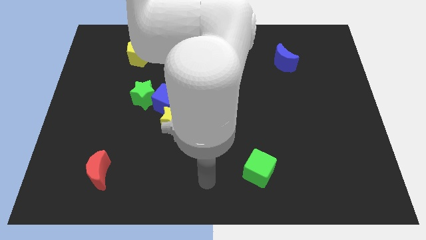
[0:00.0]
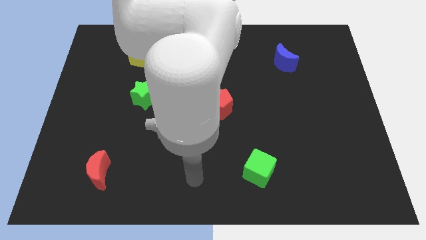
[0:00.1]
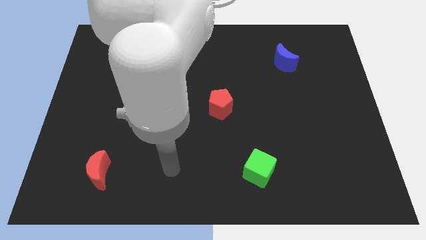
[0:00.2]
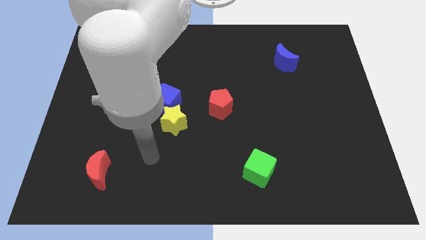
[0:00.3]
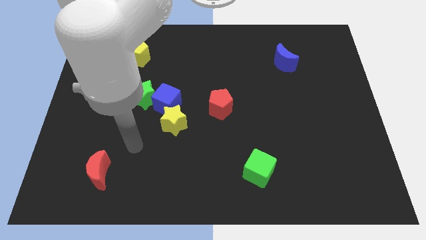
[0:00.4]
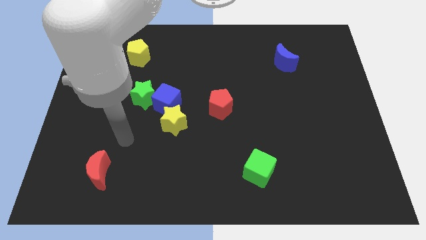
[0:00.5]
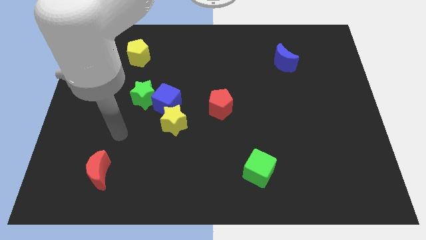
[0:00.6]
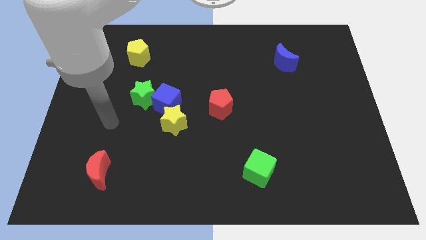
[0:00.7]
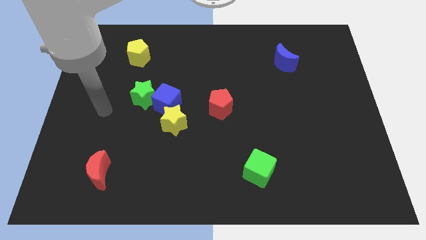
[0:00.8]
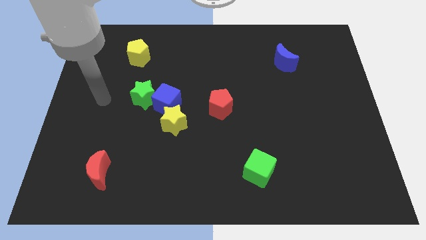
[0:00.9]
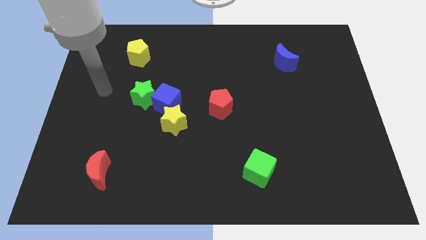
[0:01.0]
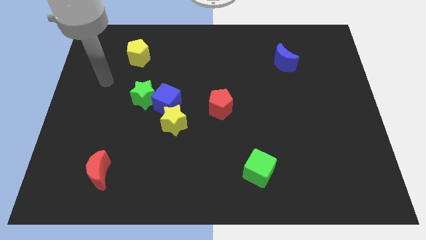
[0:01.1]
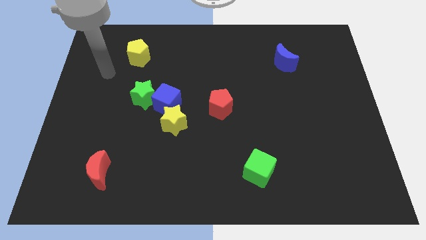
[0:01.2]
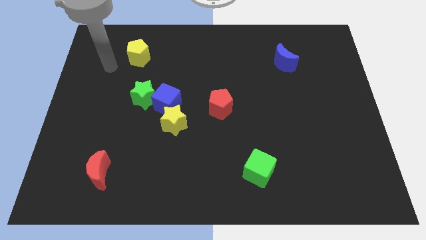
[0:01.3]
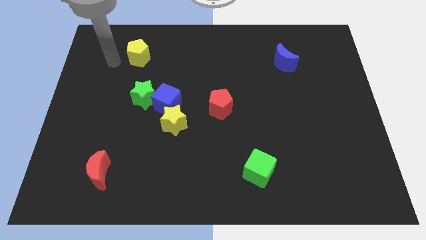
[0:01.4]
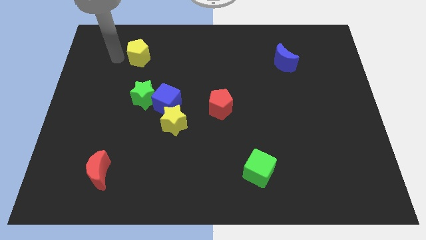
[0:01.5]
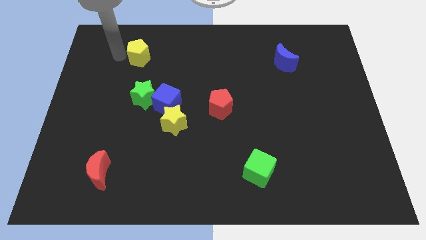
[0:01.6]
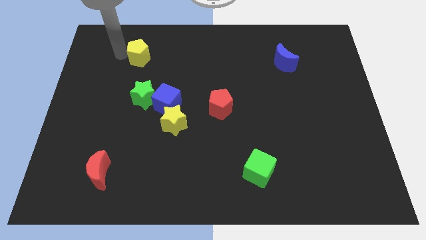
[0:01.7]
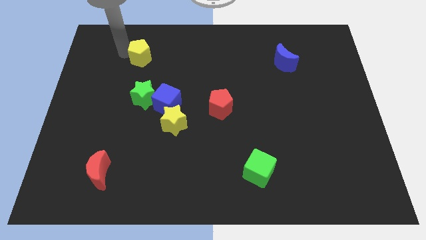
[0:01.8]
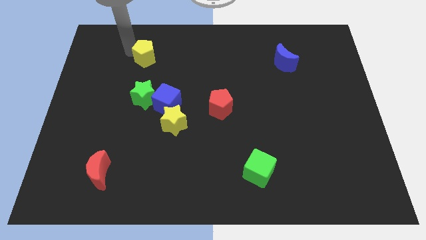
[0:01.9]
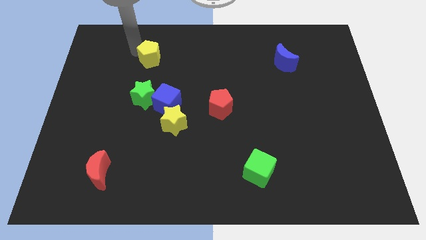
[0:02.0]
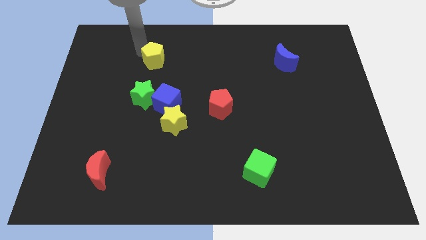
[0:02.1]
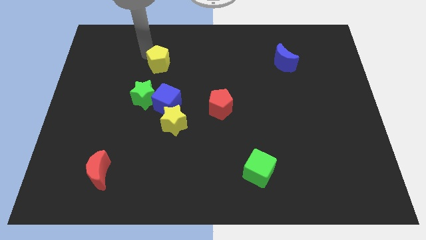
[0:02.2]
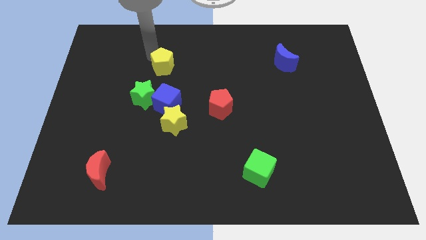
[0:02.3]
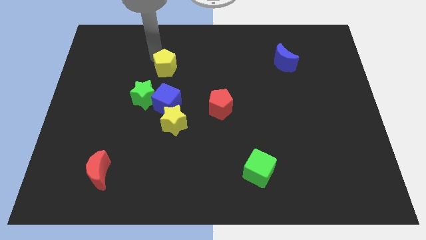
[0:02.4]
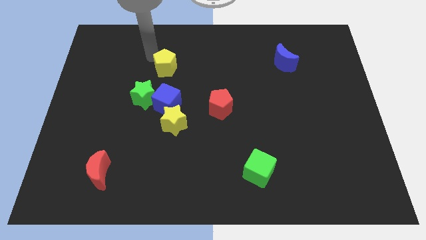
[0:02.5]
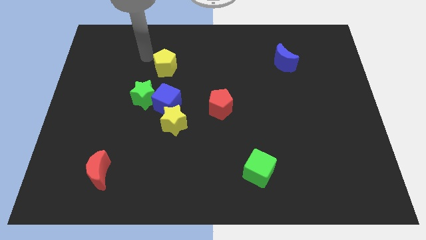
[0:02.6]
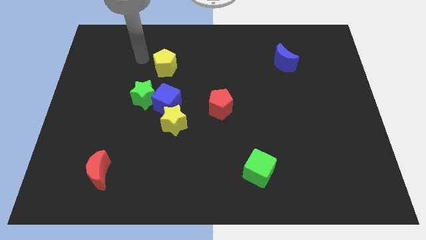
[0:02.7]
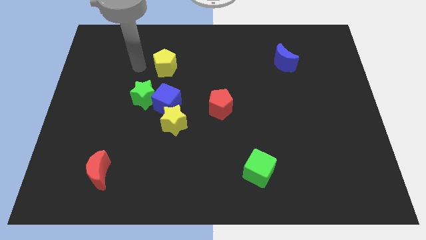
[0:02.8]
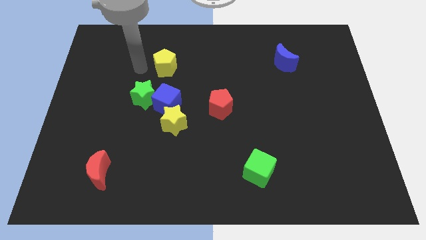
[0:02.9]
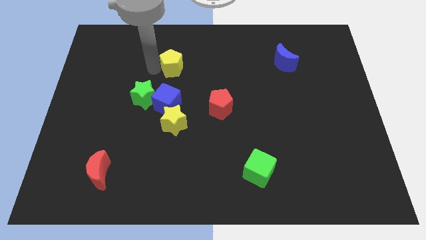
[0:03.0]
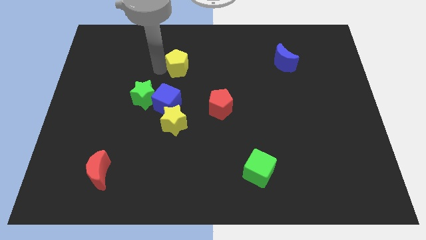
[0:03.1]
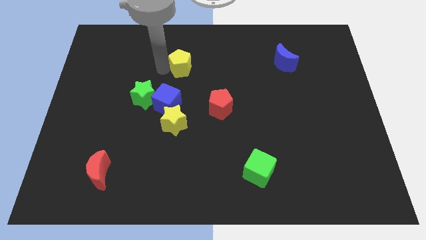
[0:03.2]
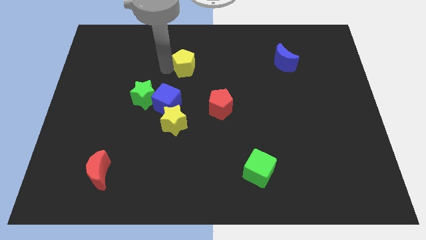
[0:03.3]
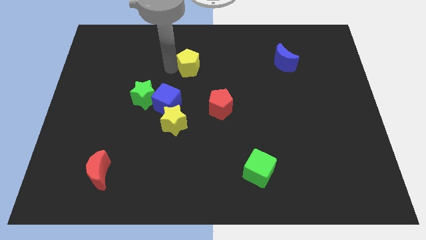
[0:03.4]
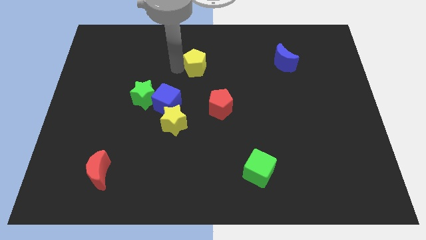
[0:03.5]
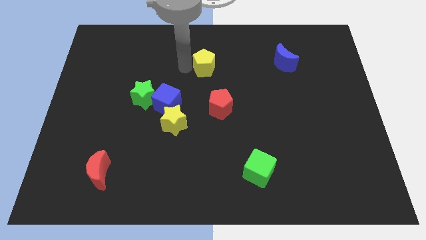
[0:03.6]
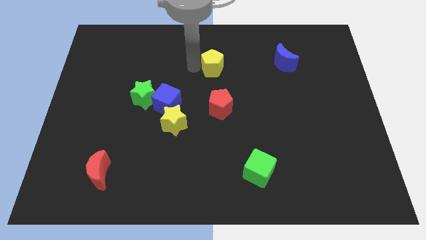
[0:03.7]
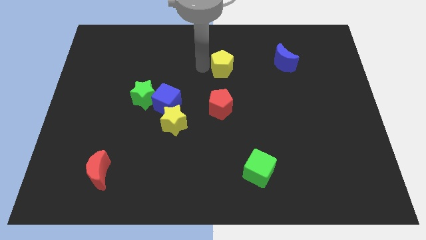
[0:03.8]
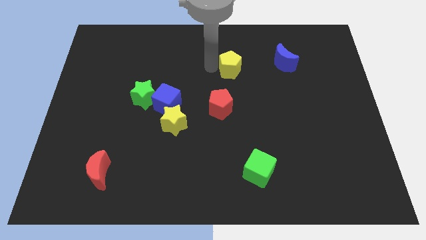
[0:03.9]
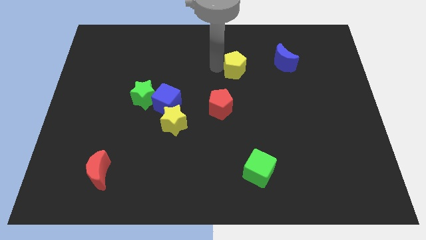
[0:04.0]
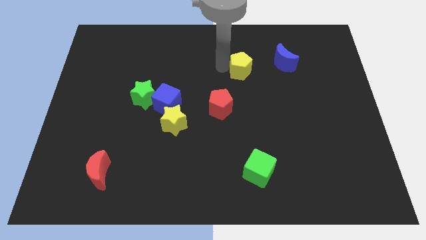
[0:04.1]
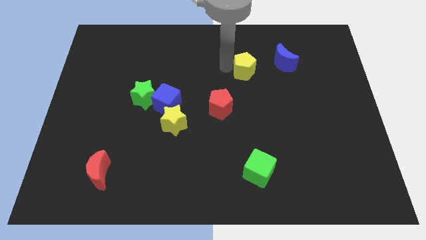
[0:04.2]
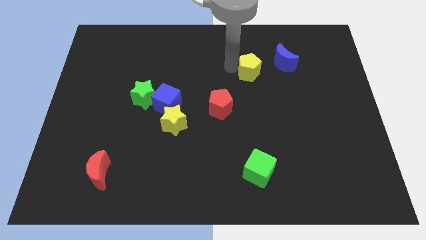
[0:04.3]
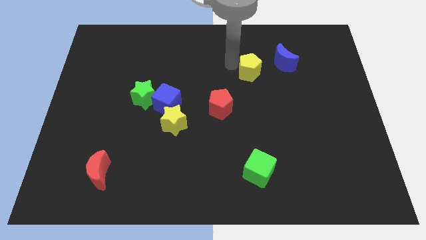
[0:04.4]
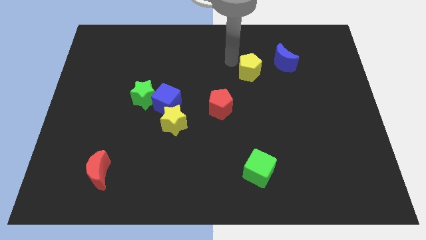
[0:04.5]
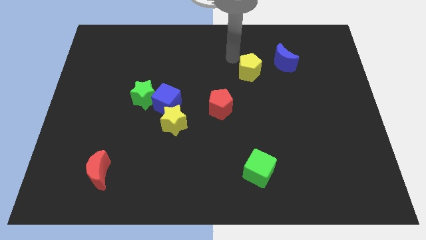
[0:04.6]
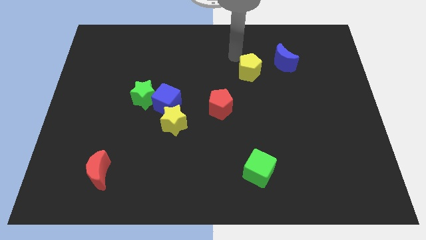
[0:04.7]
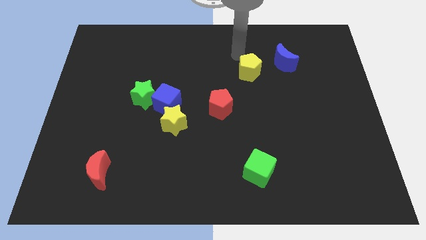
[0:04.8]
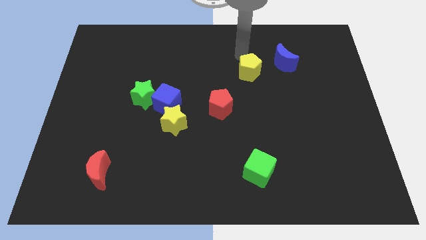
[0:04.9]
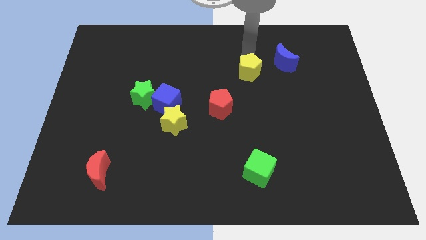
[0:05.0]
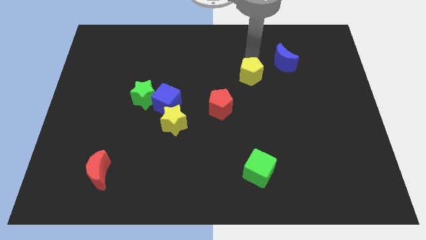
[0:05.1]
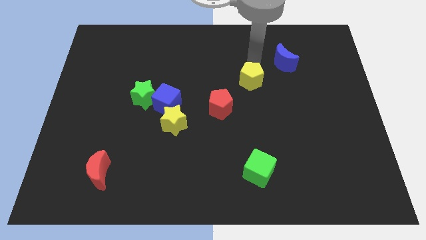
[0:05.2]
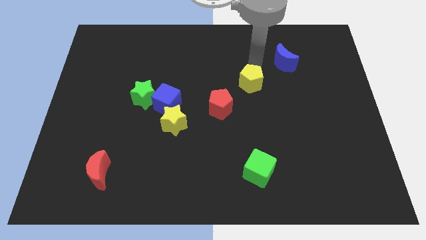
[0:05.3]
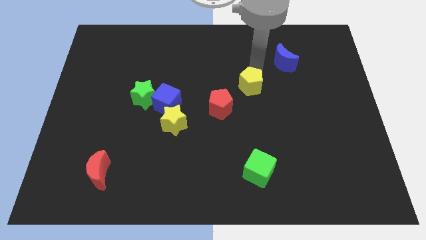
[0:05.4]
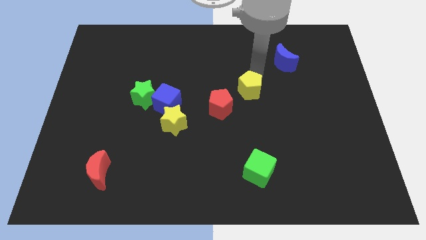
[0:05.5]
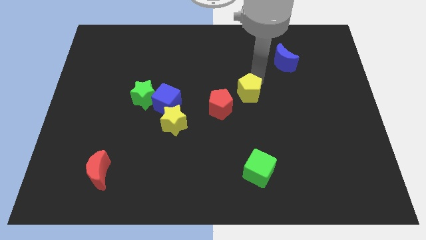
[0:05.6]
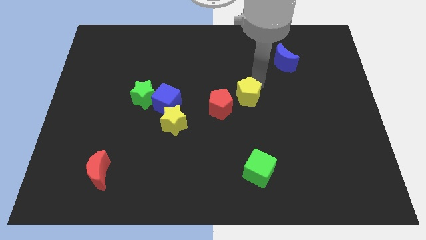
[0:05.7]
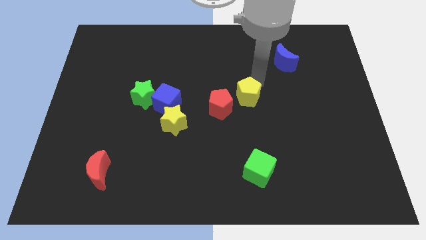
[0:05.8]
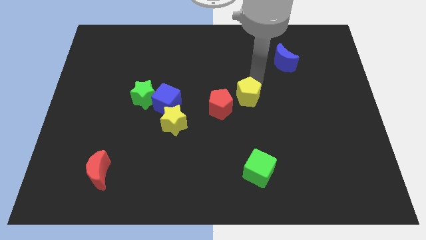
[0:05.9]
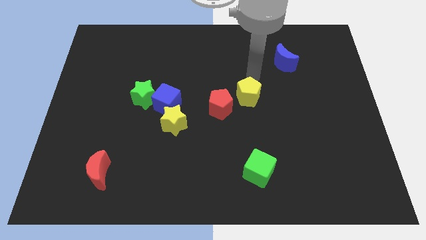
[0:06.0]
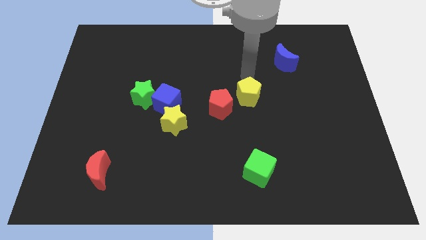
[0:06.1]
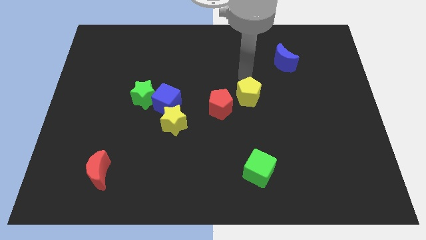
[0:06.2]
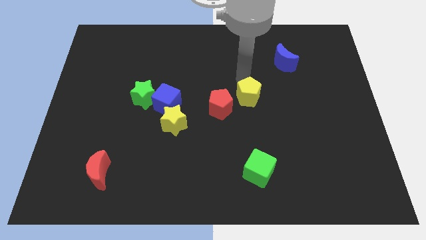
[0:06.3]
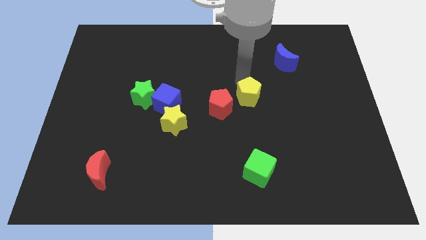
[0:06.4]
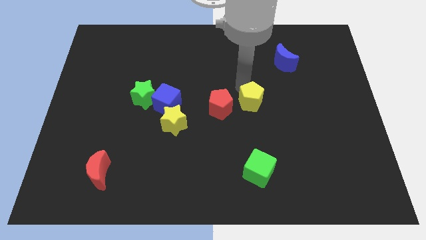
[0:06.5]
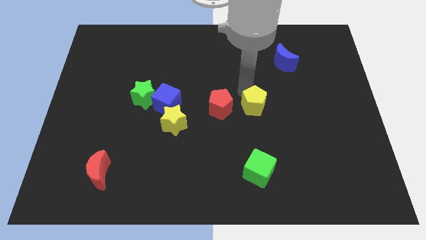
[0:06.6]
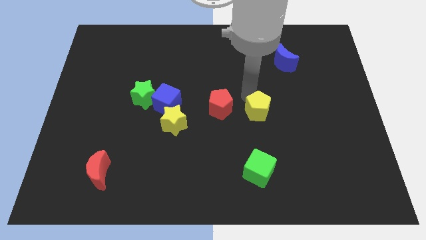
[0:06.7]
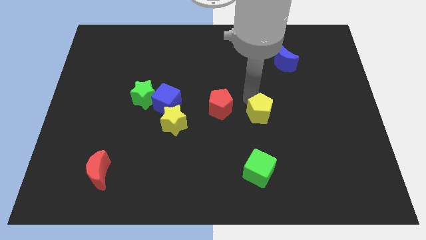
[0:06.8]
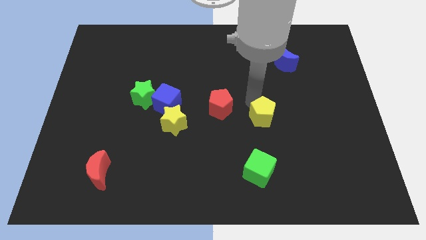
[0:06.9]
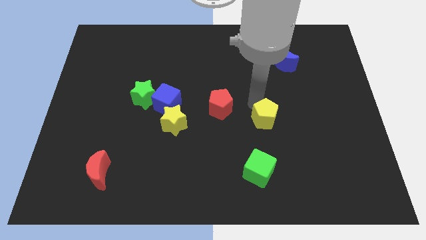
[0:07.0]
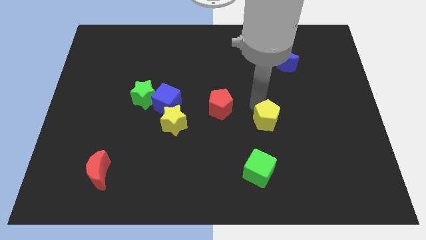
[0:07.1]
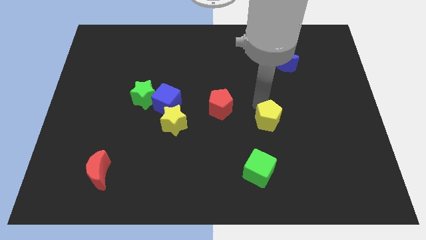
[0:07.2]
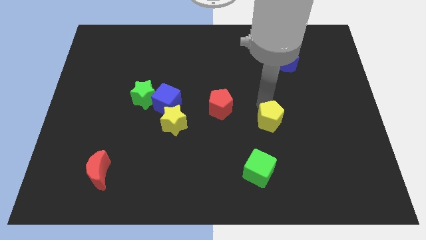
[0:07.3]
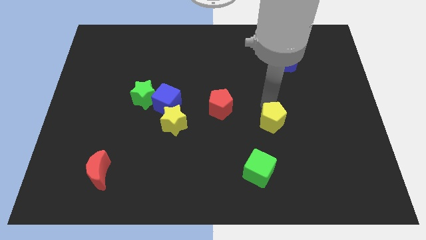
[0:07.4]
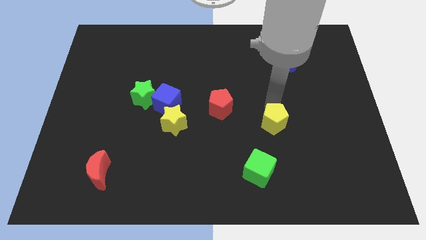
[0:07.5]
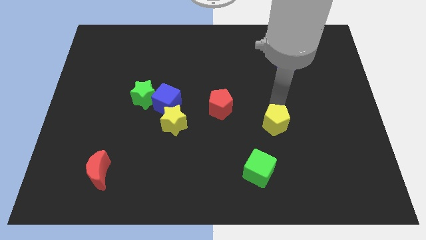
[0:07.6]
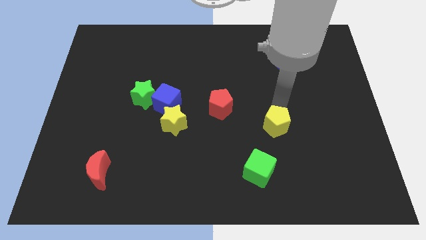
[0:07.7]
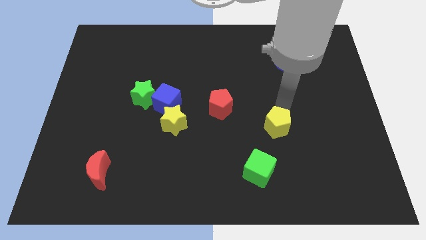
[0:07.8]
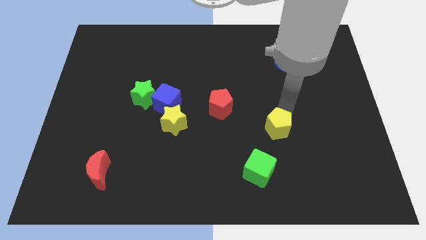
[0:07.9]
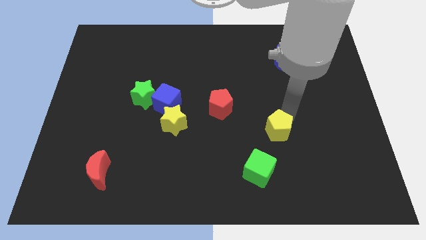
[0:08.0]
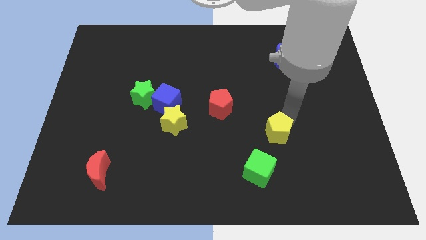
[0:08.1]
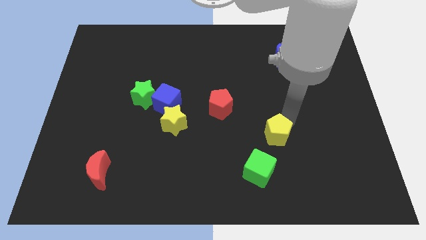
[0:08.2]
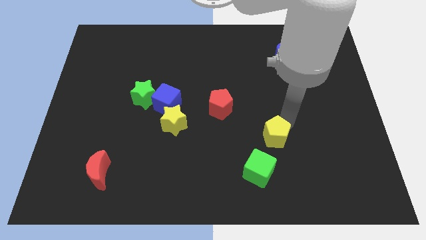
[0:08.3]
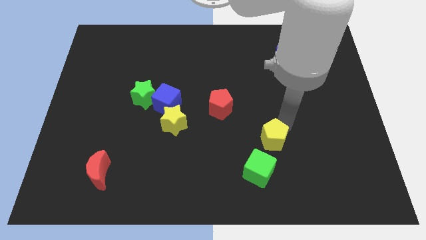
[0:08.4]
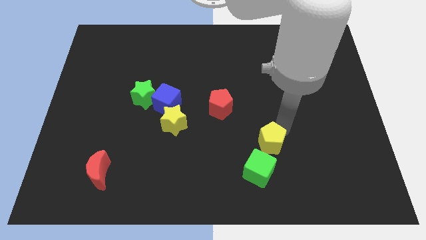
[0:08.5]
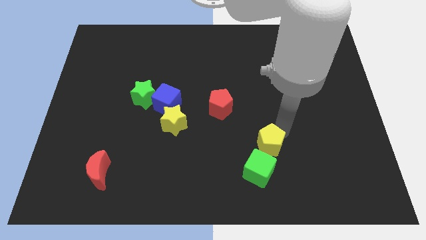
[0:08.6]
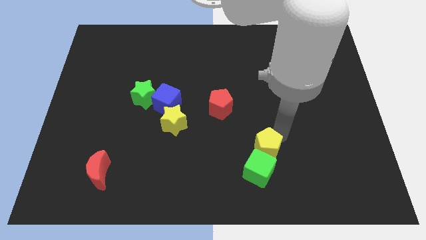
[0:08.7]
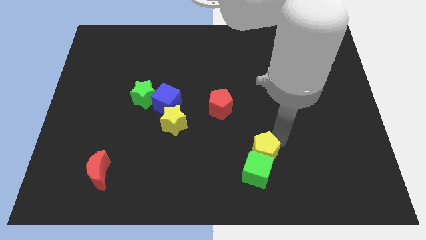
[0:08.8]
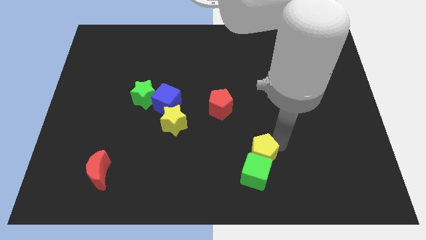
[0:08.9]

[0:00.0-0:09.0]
move the yellow pentagon towards the green cube
